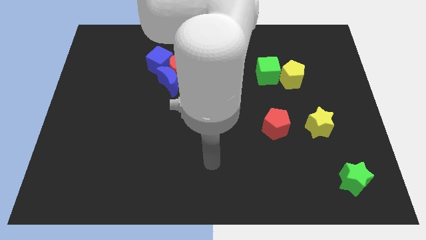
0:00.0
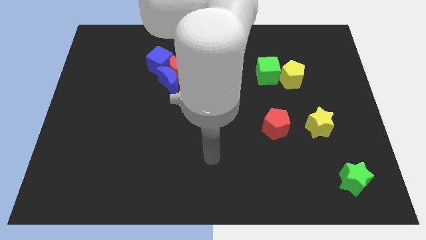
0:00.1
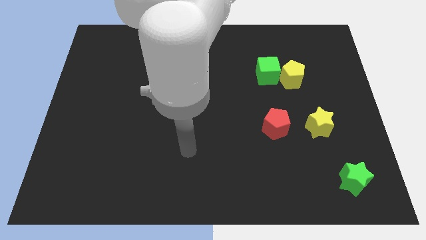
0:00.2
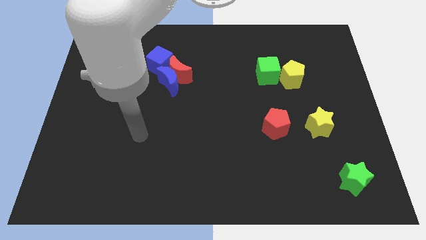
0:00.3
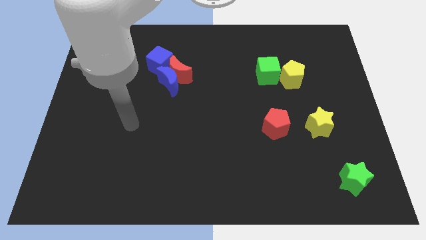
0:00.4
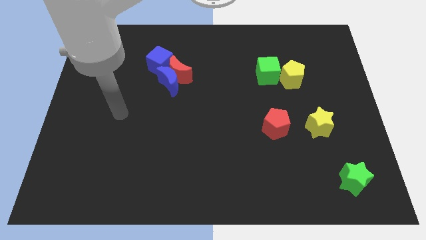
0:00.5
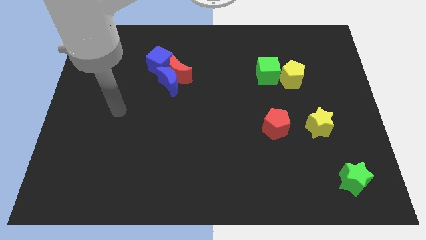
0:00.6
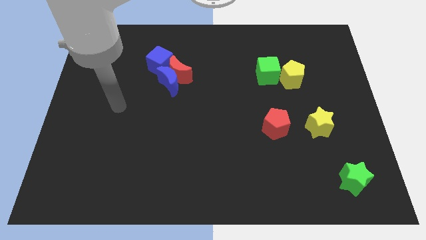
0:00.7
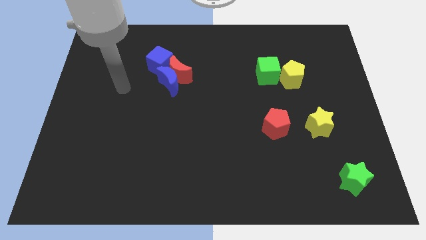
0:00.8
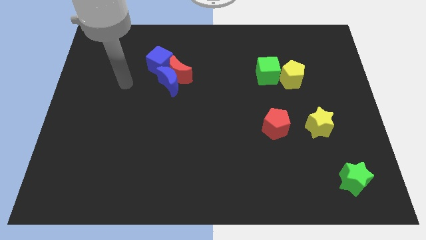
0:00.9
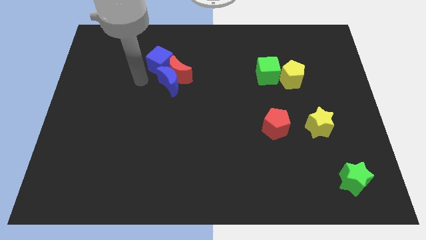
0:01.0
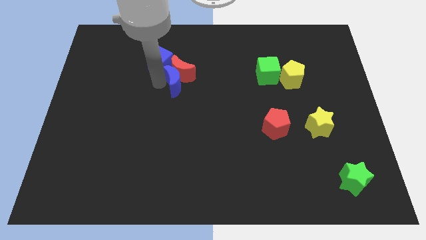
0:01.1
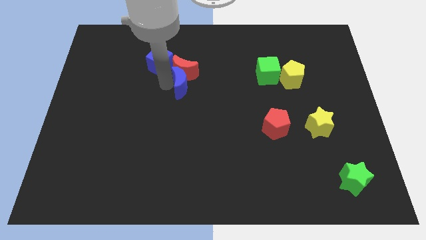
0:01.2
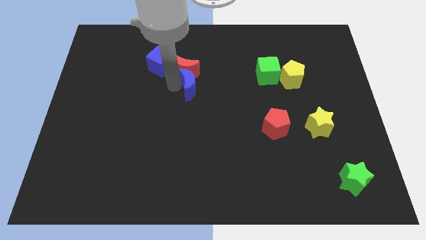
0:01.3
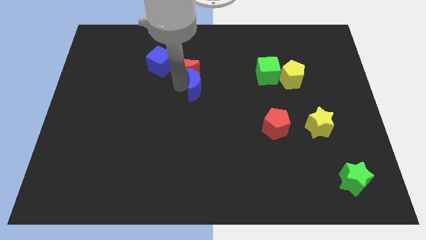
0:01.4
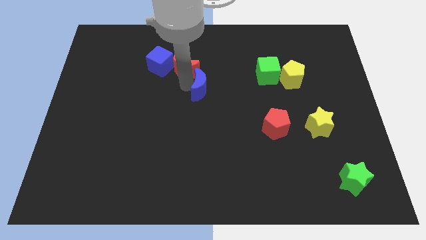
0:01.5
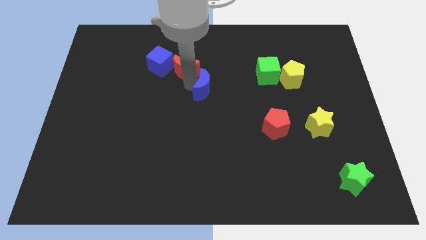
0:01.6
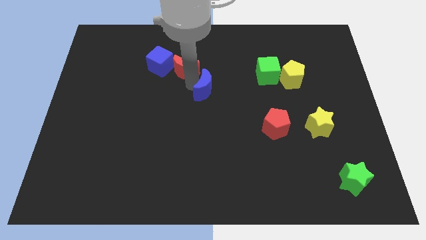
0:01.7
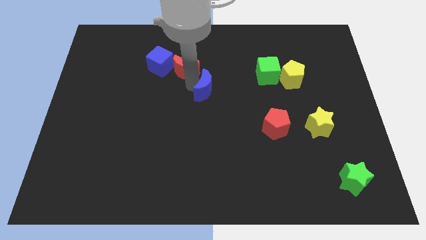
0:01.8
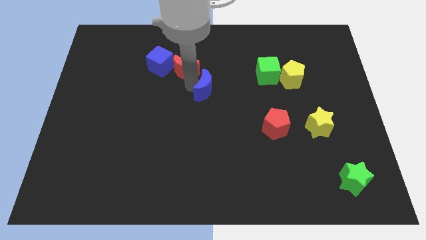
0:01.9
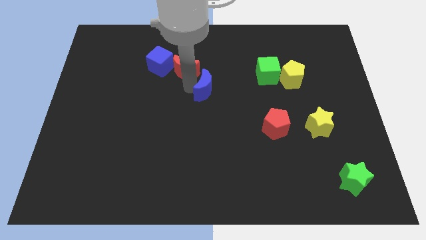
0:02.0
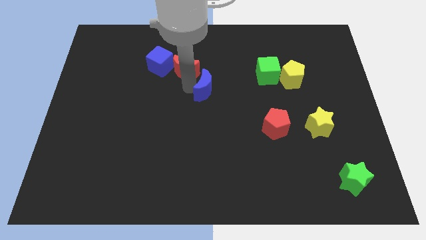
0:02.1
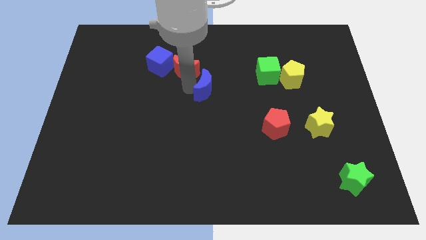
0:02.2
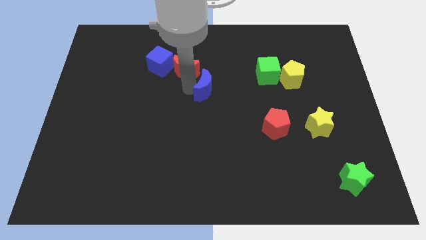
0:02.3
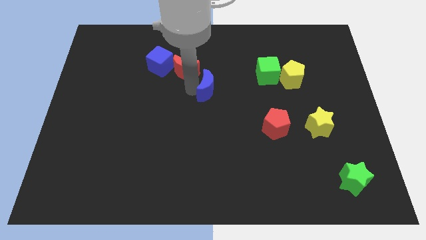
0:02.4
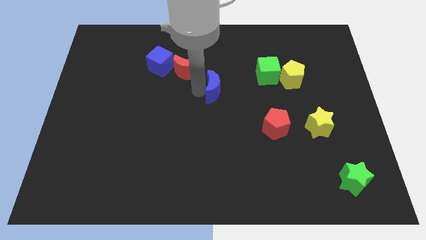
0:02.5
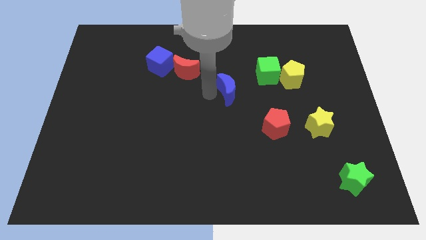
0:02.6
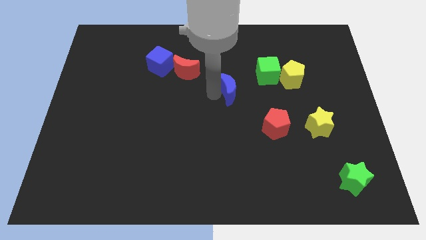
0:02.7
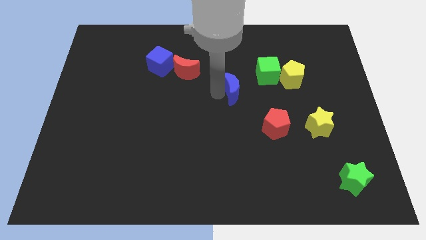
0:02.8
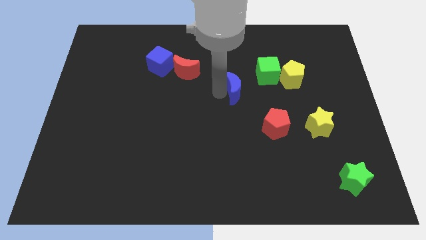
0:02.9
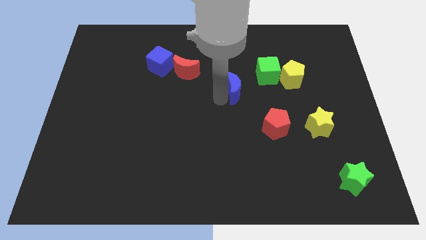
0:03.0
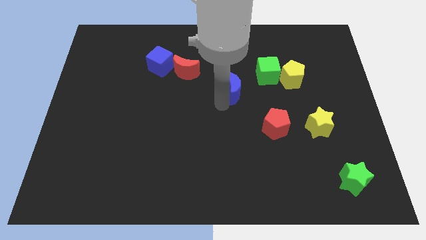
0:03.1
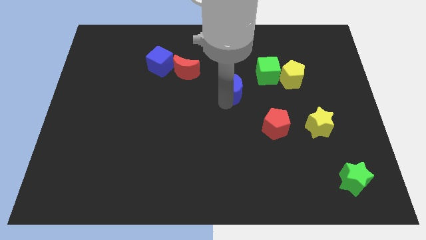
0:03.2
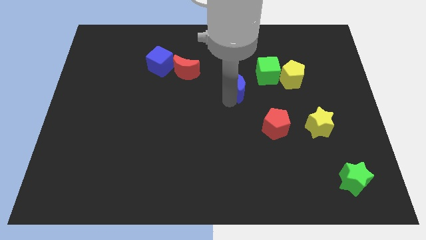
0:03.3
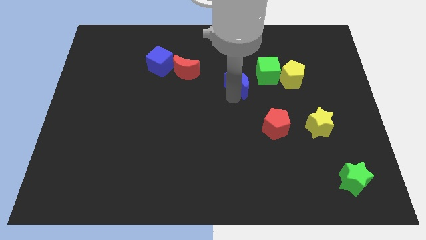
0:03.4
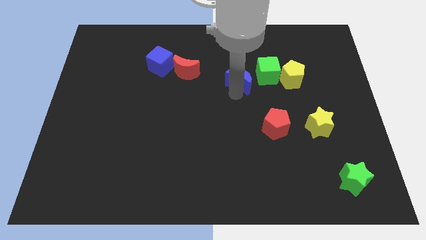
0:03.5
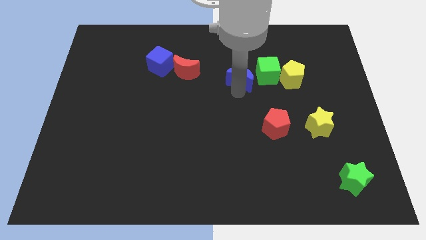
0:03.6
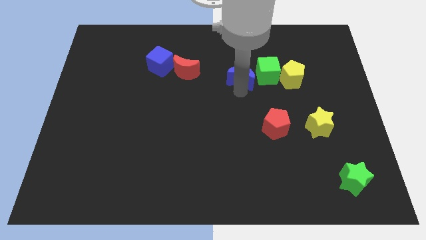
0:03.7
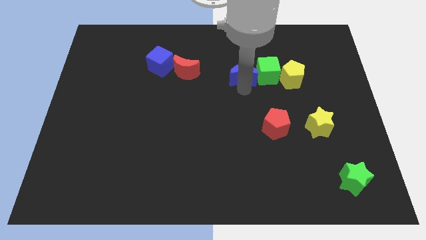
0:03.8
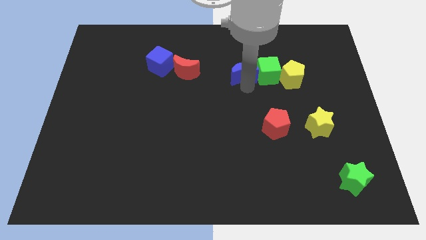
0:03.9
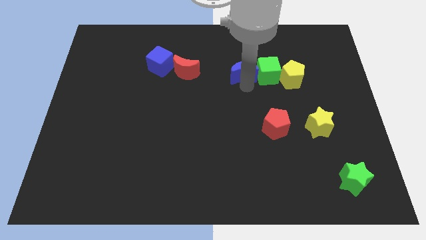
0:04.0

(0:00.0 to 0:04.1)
put the blue moon to the green cube

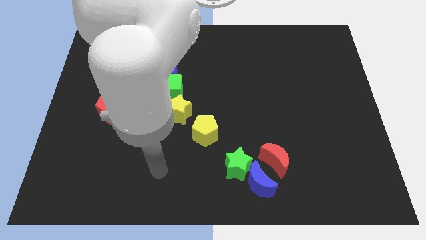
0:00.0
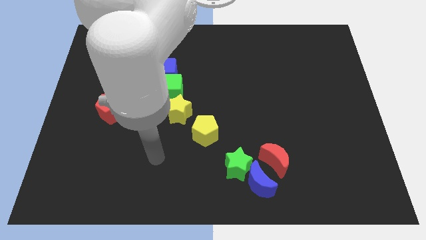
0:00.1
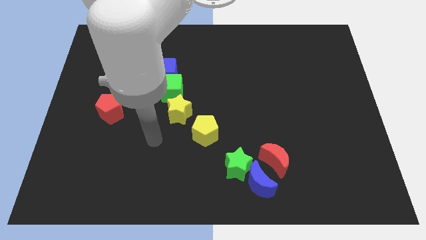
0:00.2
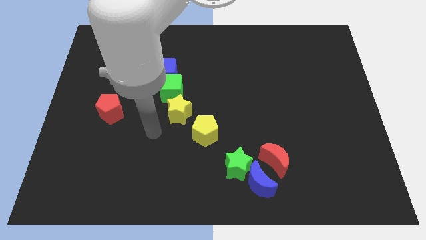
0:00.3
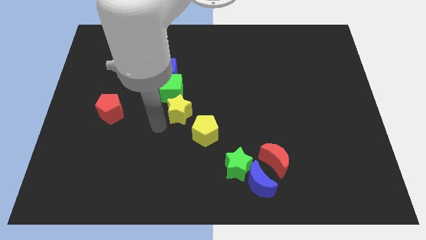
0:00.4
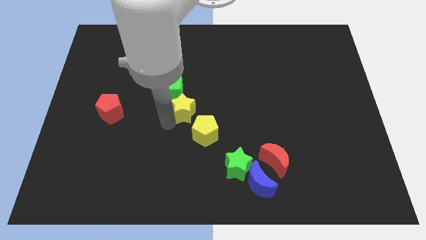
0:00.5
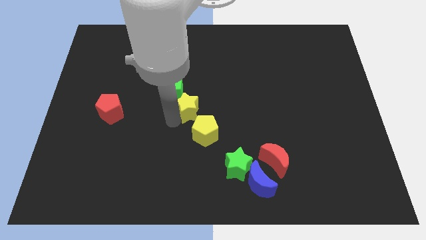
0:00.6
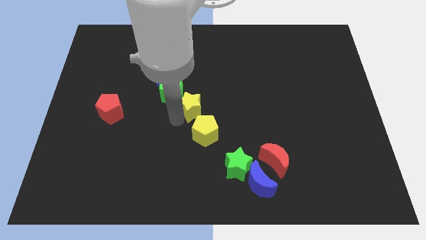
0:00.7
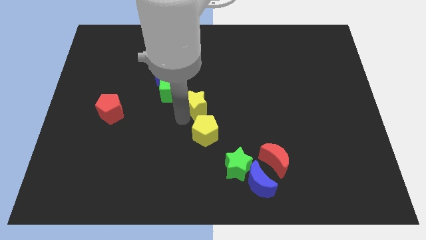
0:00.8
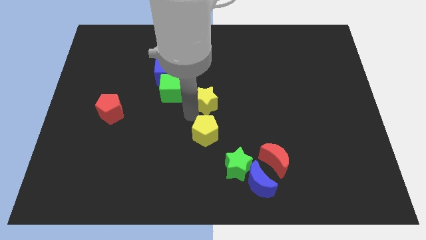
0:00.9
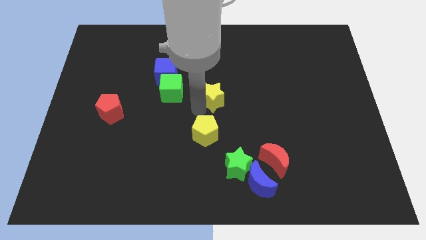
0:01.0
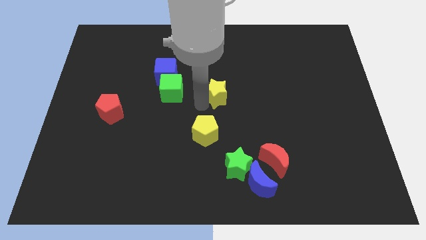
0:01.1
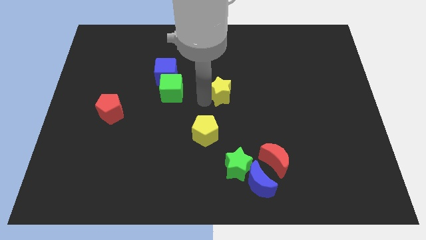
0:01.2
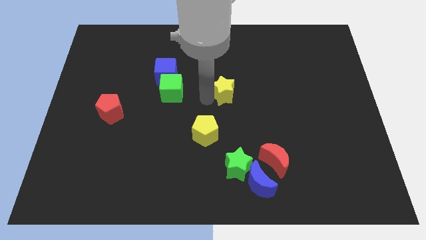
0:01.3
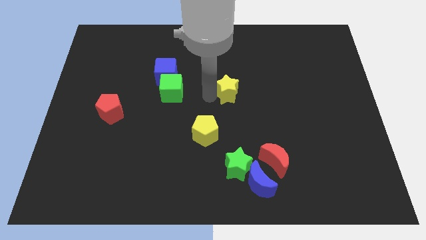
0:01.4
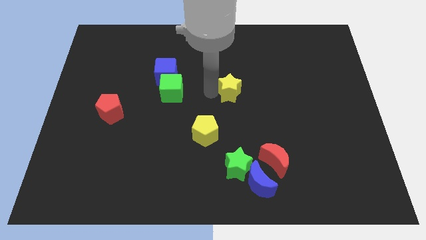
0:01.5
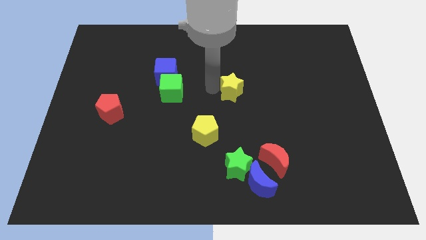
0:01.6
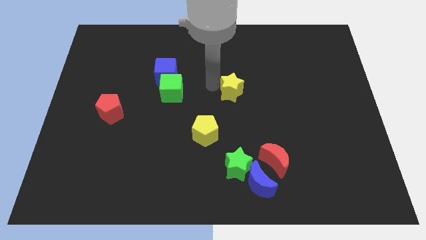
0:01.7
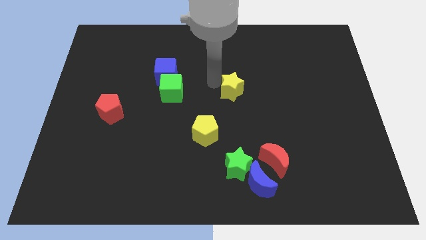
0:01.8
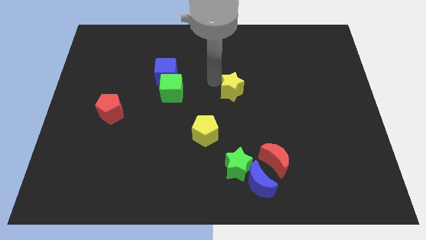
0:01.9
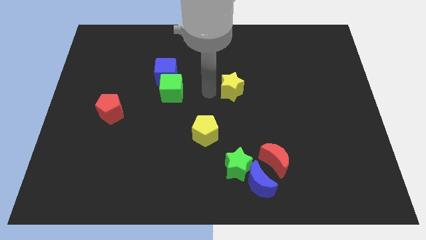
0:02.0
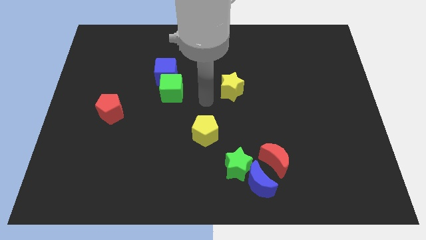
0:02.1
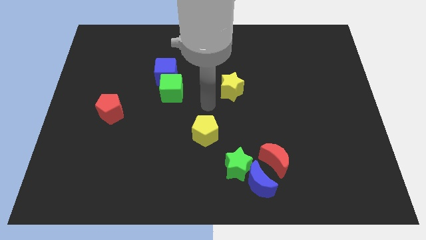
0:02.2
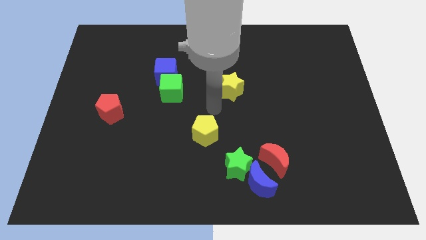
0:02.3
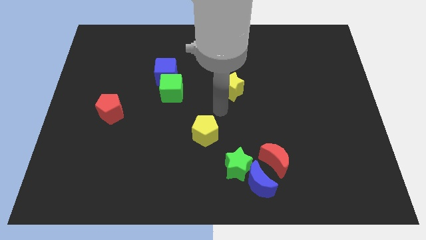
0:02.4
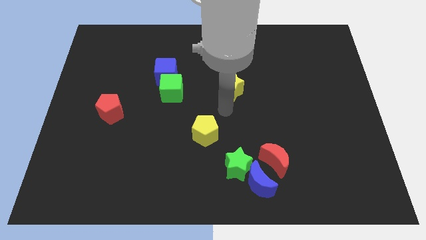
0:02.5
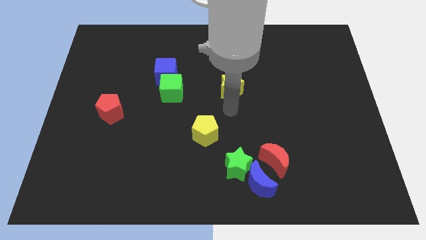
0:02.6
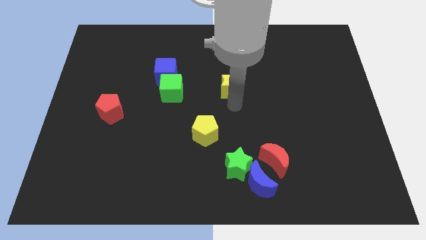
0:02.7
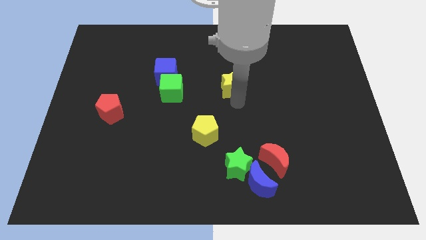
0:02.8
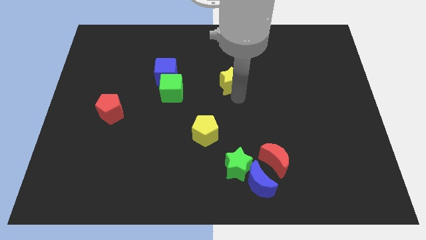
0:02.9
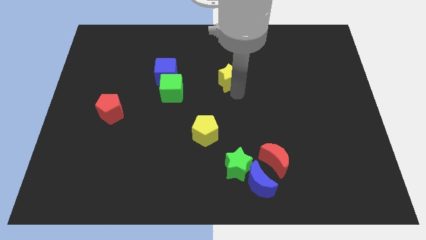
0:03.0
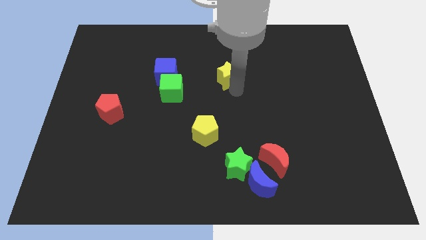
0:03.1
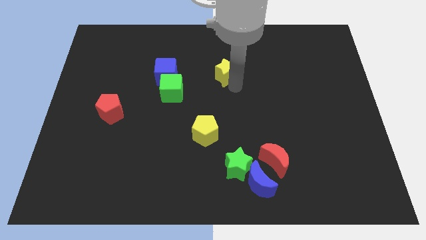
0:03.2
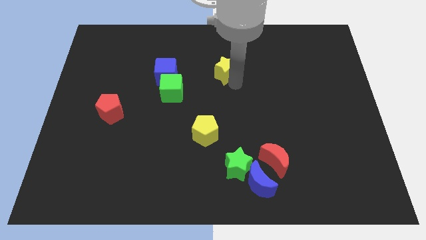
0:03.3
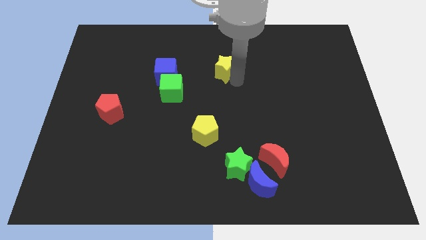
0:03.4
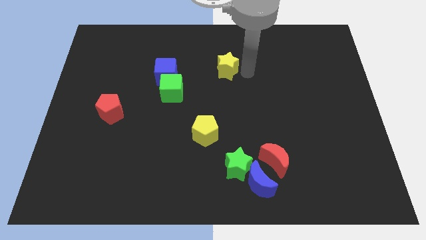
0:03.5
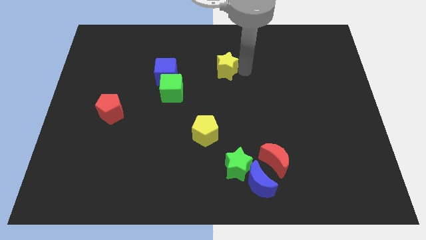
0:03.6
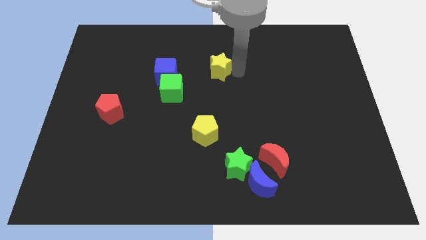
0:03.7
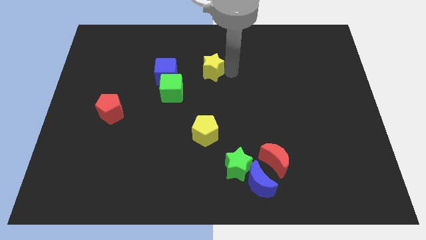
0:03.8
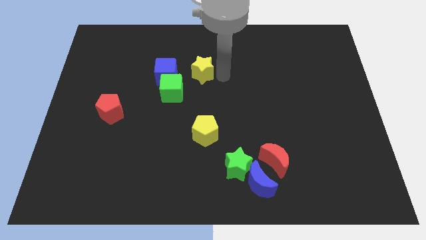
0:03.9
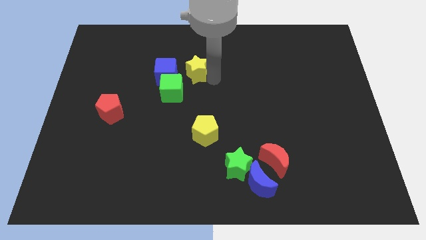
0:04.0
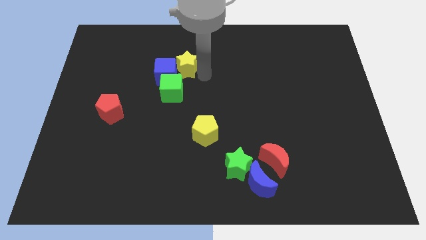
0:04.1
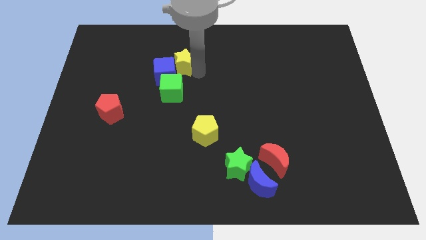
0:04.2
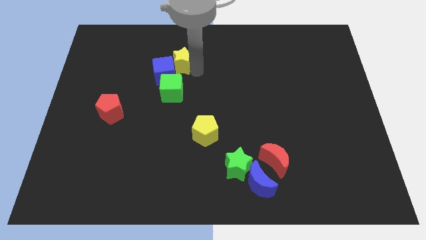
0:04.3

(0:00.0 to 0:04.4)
put the yellow star next to the blue cube
